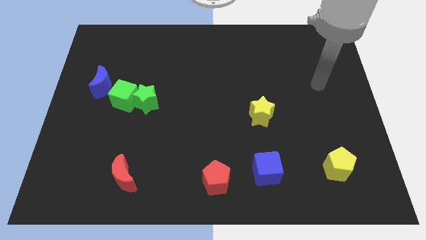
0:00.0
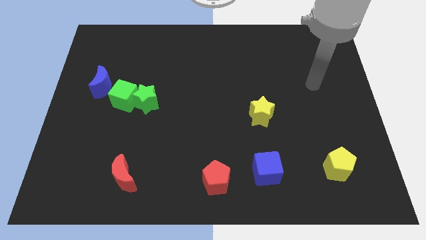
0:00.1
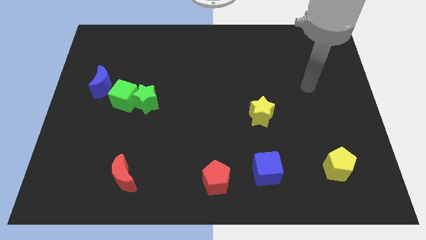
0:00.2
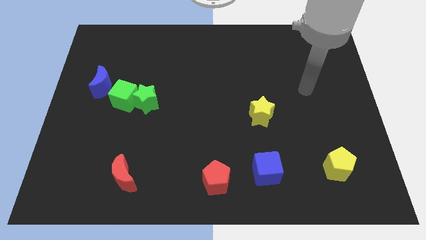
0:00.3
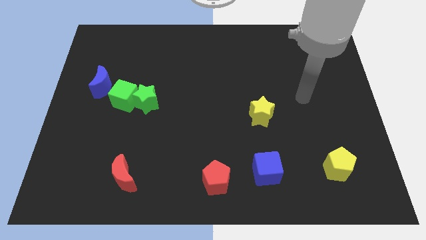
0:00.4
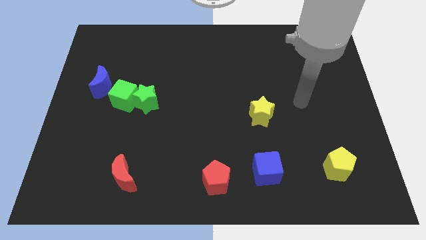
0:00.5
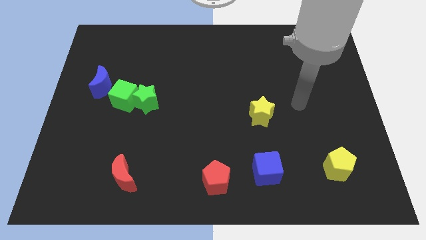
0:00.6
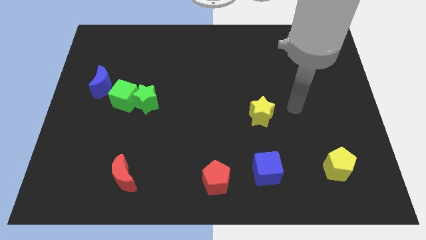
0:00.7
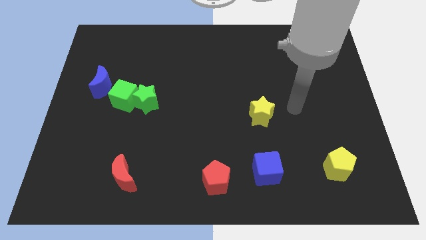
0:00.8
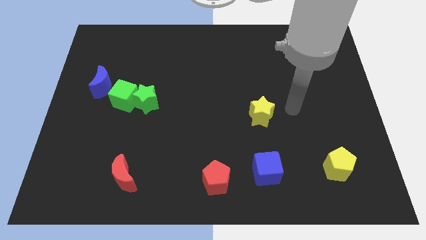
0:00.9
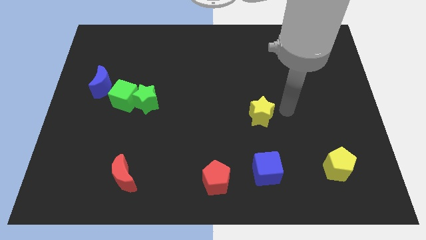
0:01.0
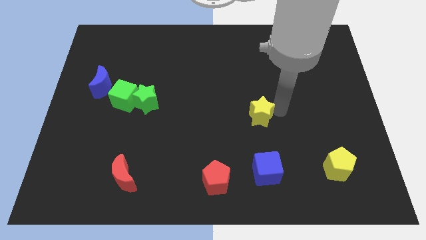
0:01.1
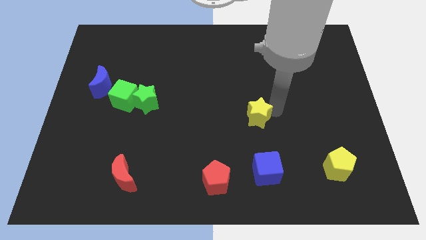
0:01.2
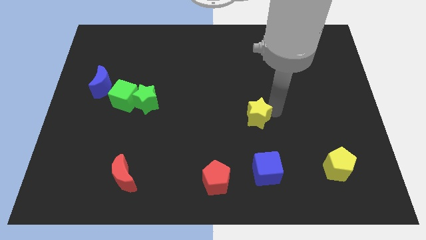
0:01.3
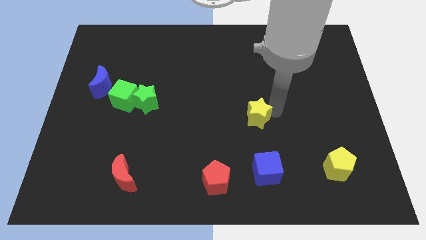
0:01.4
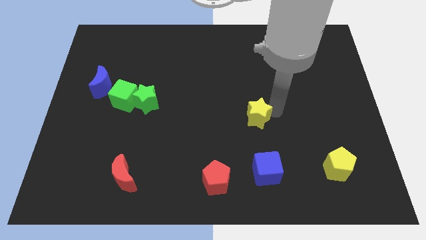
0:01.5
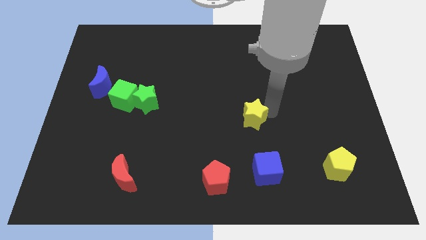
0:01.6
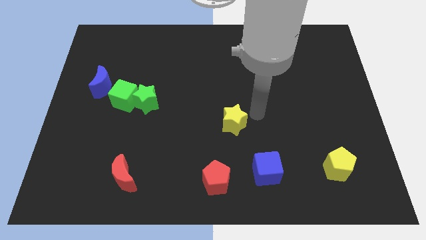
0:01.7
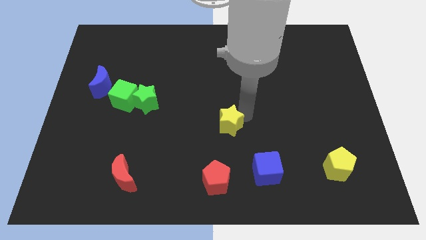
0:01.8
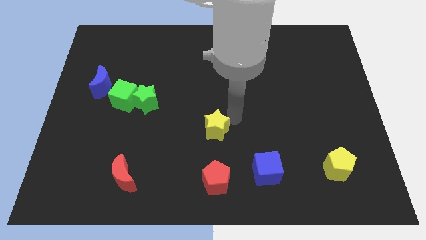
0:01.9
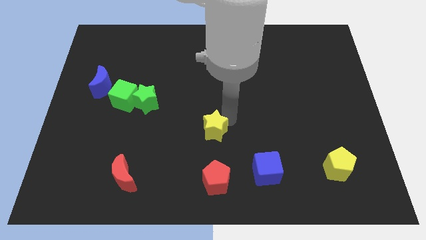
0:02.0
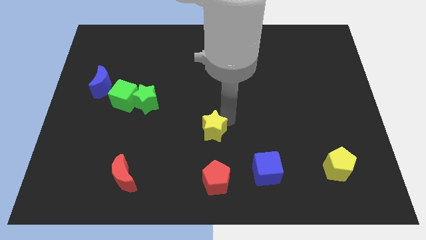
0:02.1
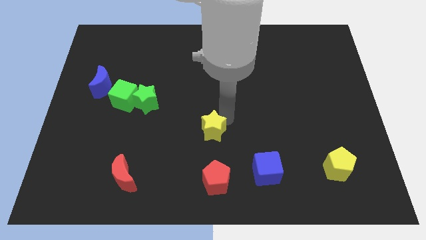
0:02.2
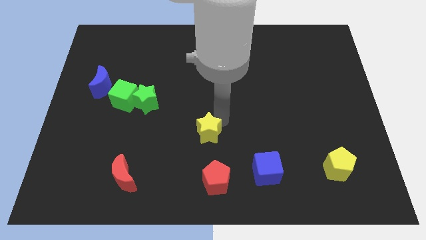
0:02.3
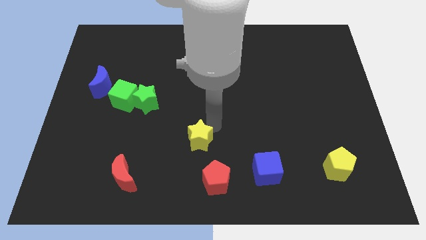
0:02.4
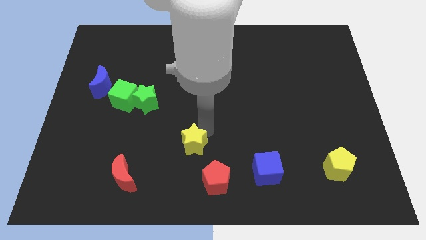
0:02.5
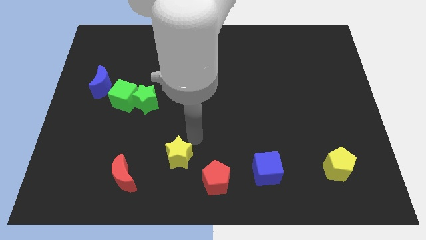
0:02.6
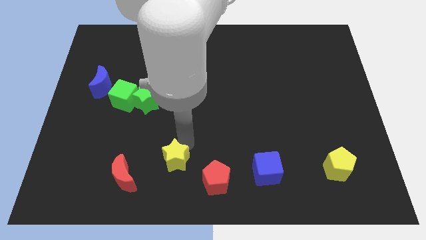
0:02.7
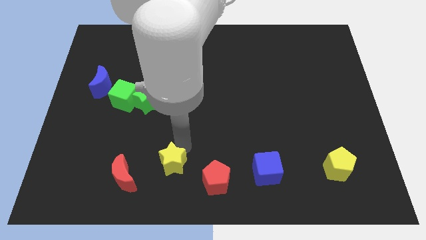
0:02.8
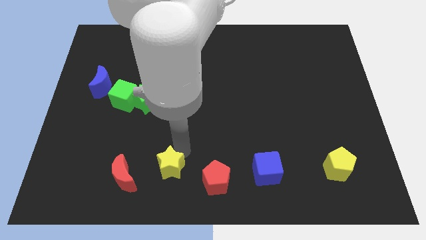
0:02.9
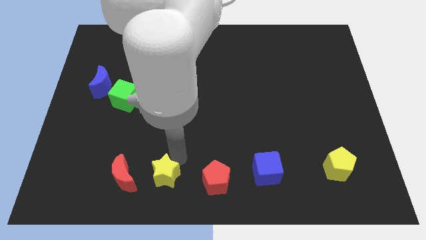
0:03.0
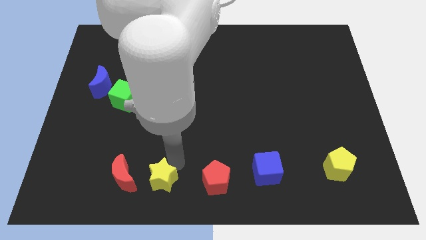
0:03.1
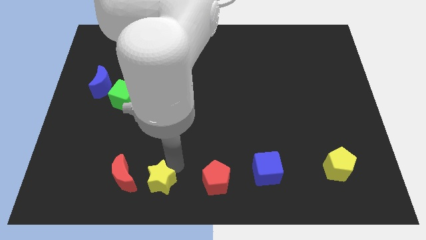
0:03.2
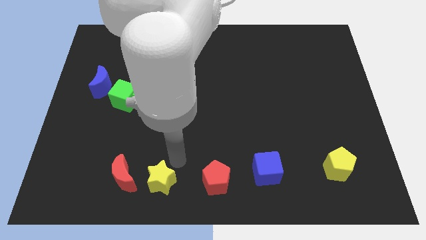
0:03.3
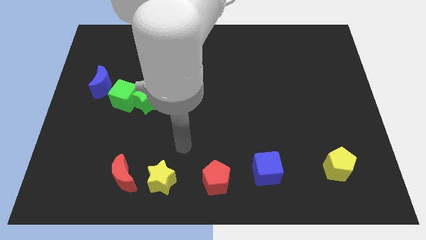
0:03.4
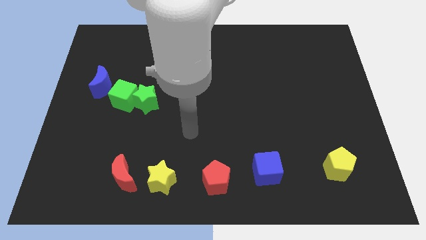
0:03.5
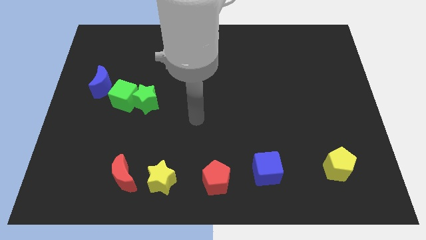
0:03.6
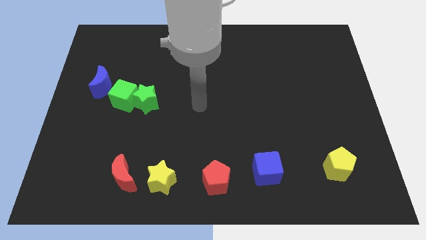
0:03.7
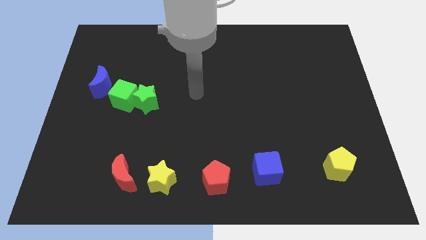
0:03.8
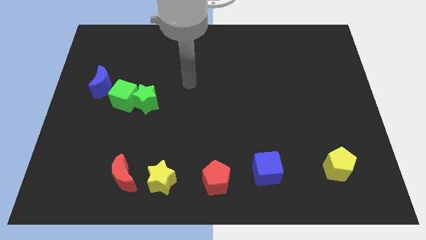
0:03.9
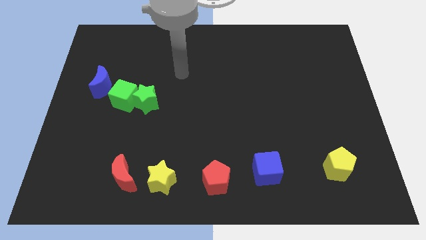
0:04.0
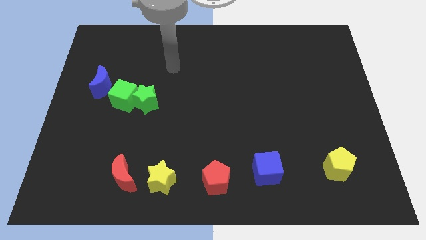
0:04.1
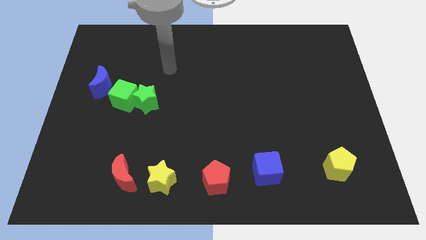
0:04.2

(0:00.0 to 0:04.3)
push the yellow star in between the red blocks

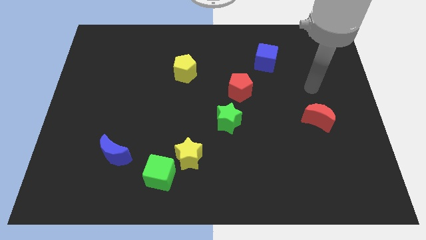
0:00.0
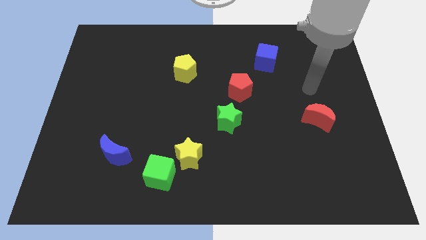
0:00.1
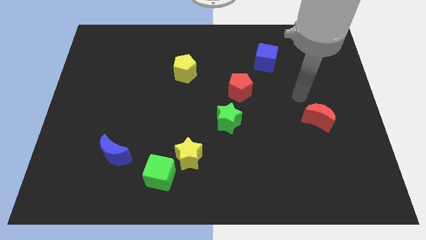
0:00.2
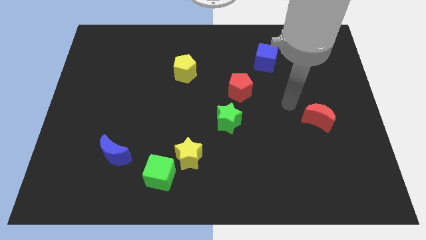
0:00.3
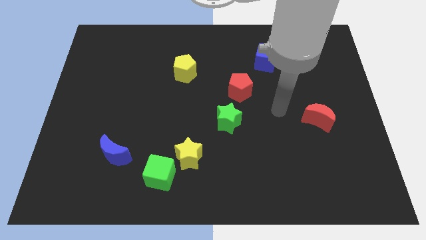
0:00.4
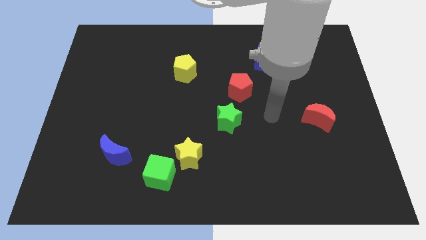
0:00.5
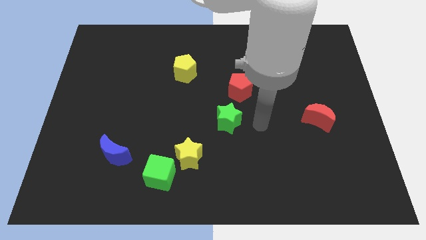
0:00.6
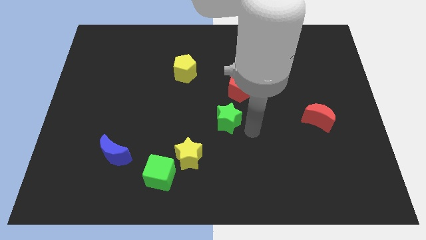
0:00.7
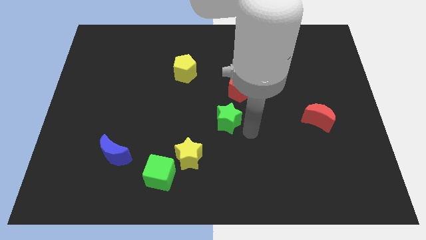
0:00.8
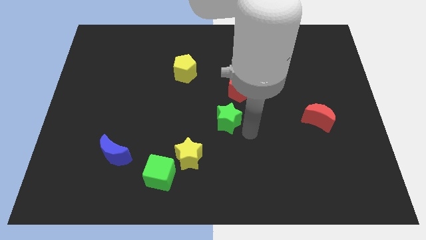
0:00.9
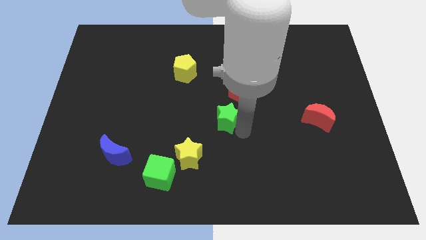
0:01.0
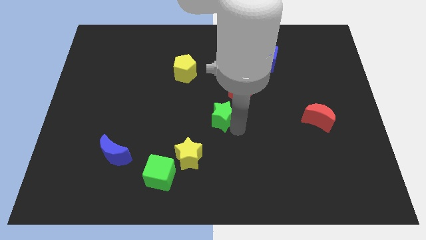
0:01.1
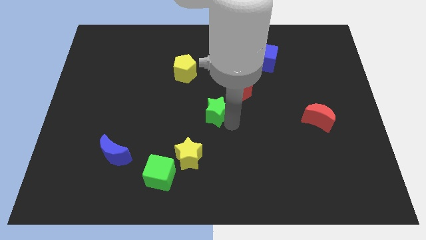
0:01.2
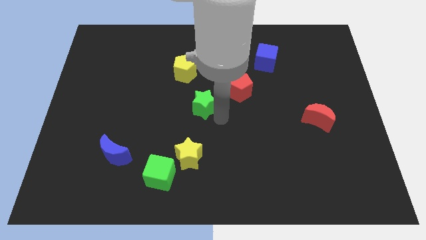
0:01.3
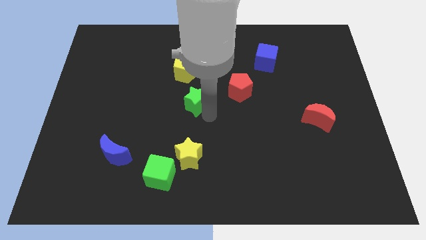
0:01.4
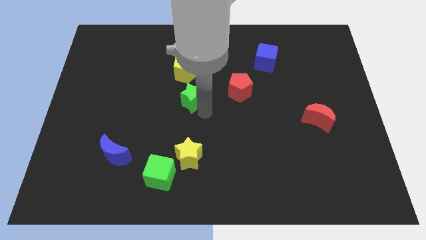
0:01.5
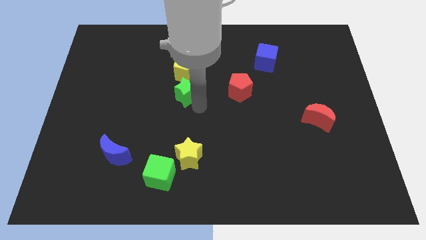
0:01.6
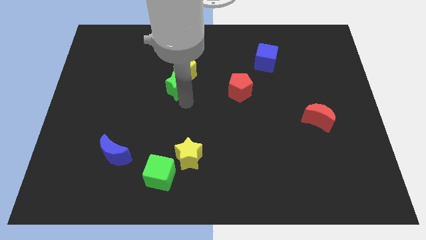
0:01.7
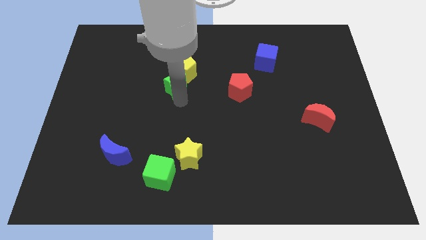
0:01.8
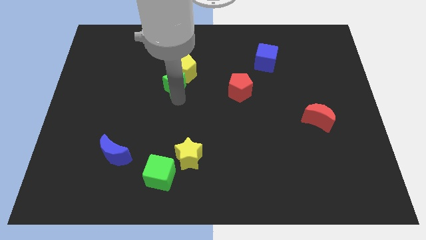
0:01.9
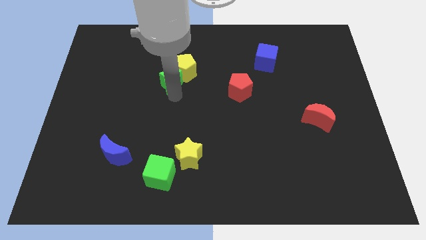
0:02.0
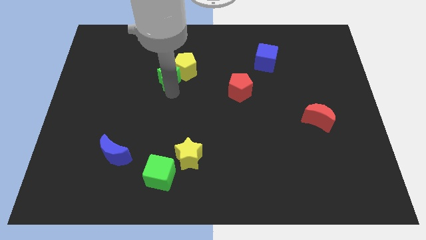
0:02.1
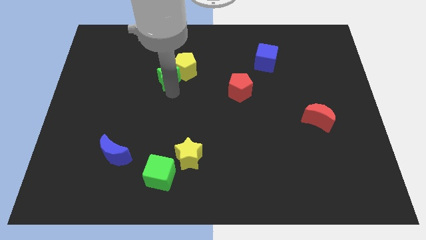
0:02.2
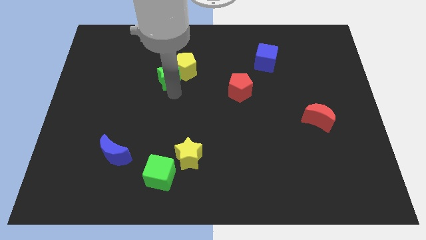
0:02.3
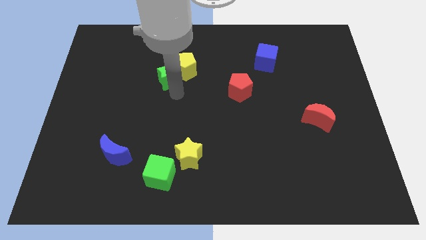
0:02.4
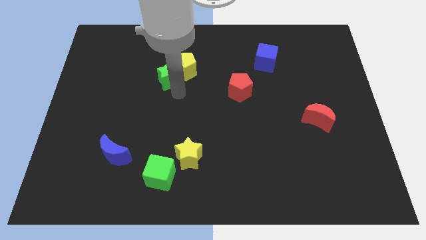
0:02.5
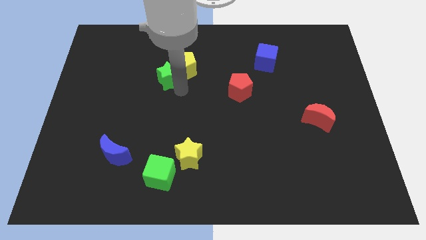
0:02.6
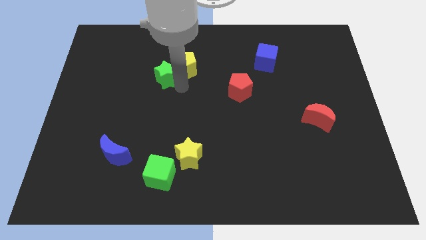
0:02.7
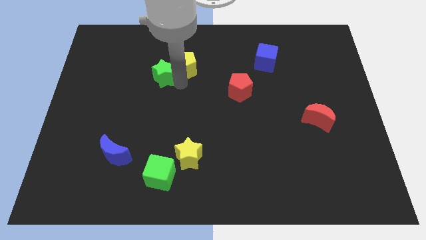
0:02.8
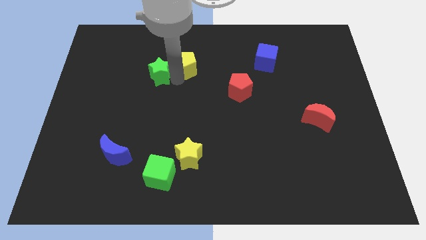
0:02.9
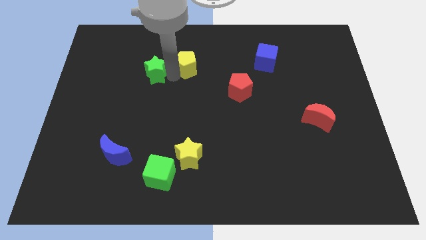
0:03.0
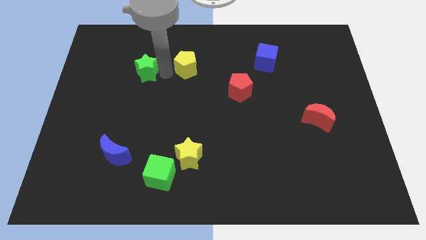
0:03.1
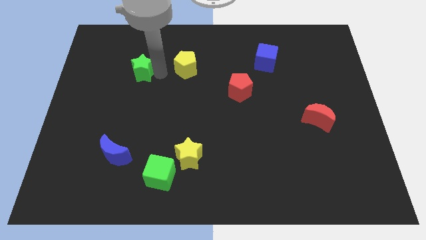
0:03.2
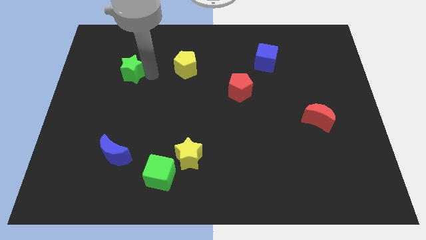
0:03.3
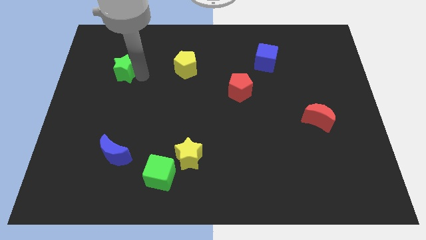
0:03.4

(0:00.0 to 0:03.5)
move the green star to the left of the yellow pentagon

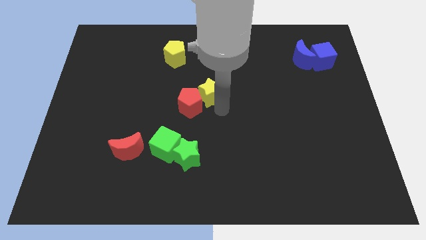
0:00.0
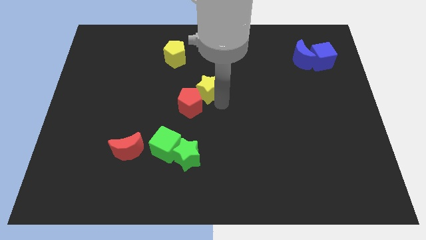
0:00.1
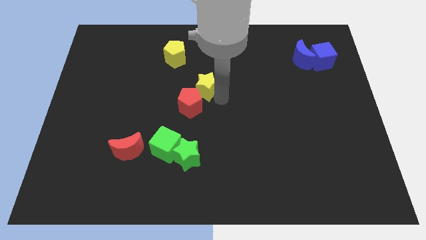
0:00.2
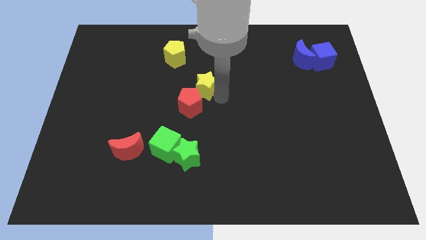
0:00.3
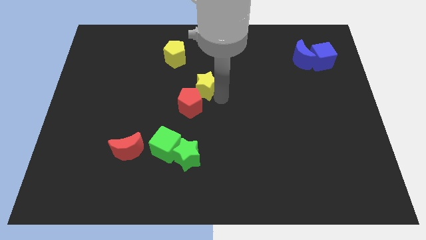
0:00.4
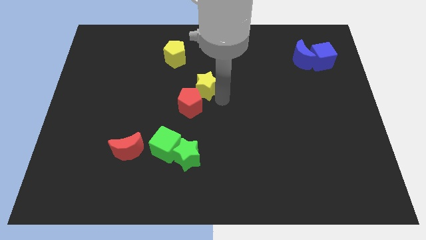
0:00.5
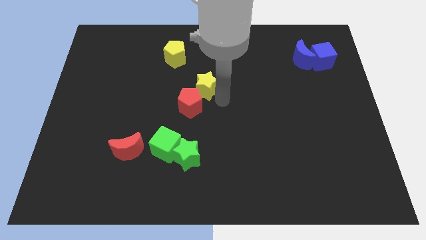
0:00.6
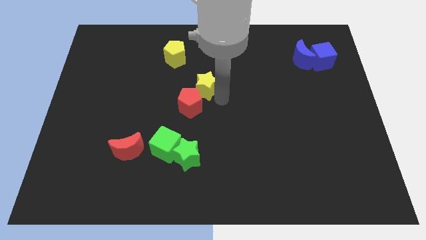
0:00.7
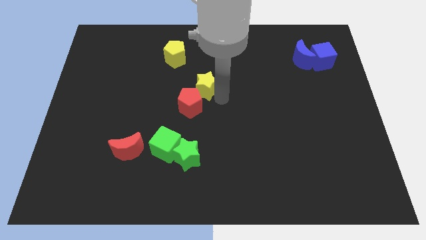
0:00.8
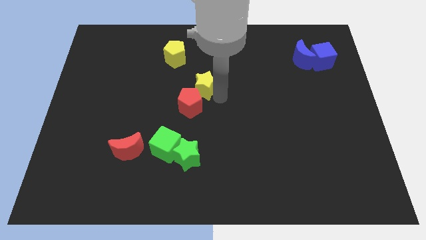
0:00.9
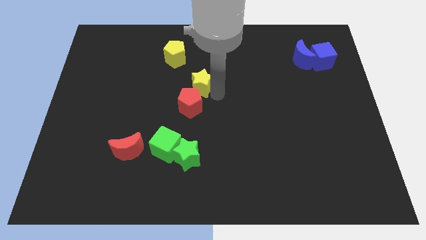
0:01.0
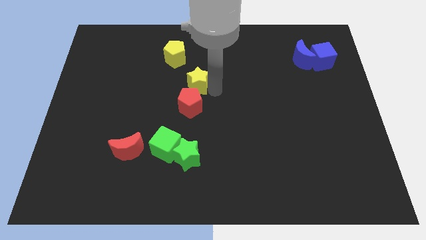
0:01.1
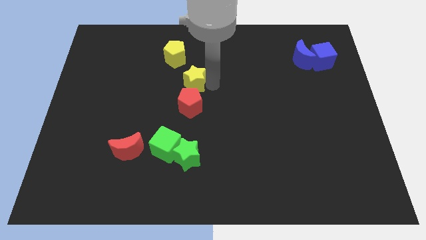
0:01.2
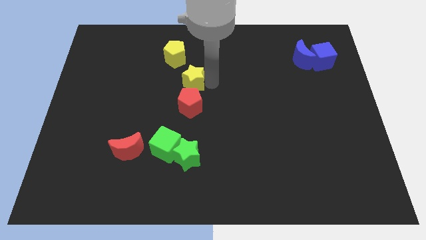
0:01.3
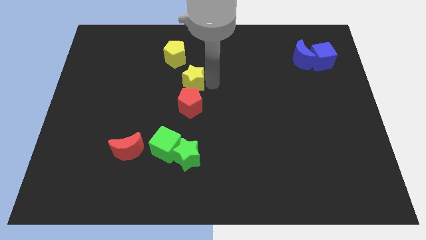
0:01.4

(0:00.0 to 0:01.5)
move the yellow star to the top of the red pentagon
